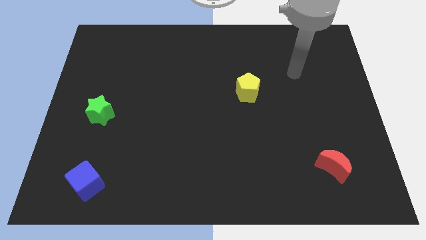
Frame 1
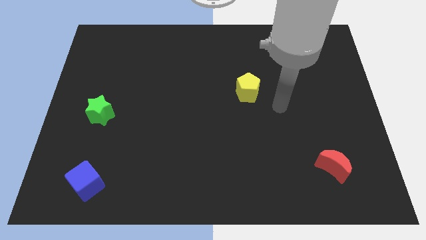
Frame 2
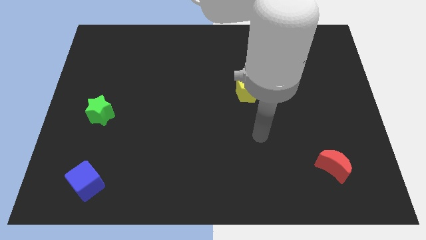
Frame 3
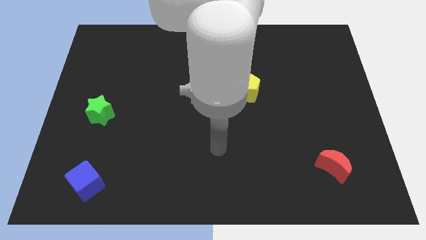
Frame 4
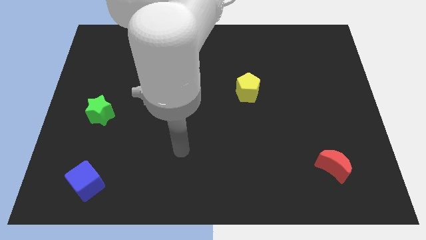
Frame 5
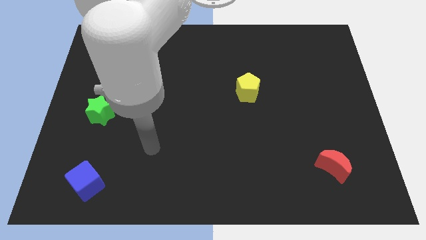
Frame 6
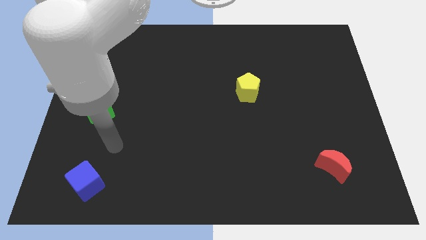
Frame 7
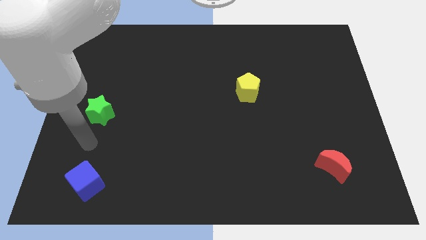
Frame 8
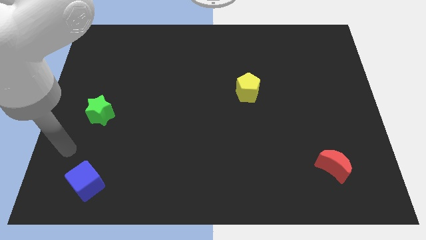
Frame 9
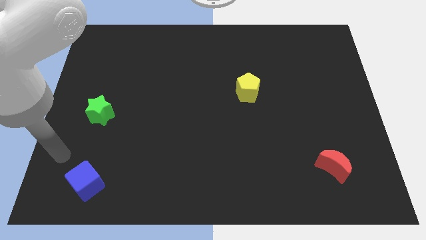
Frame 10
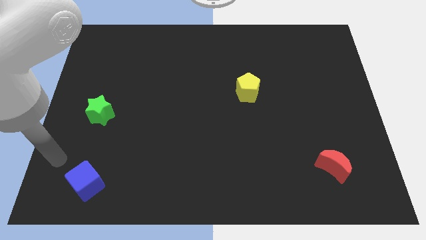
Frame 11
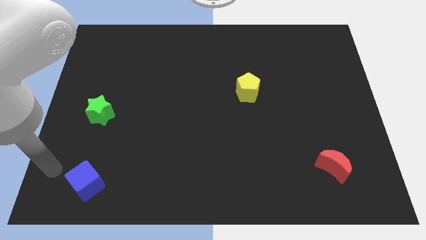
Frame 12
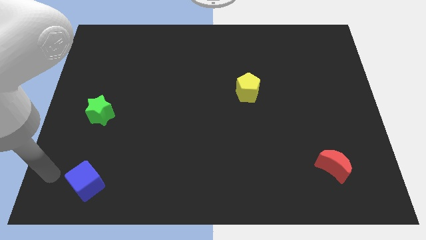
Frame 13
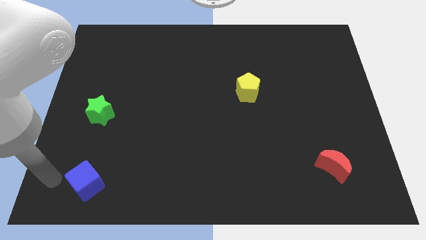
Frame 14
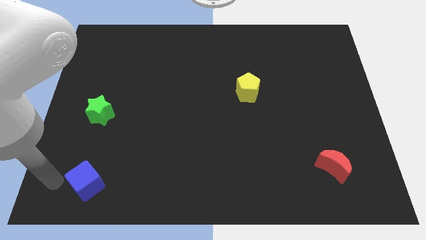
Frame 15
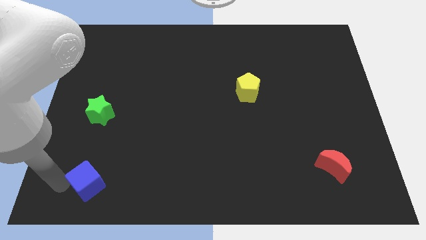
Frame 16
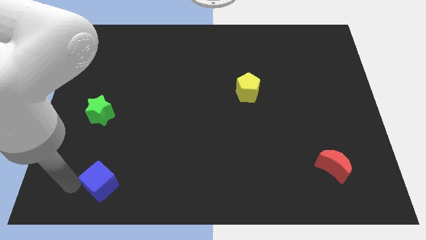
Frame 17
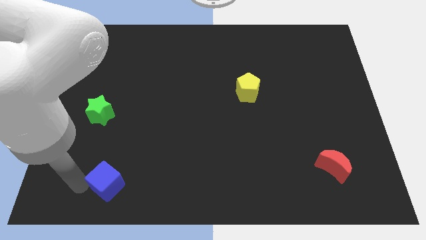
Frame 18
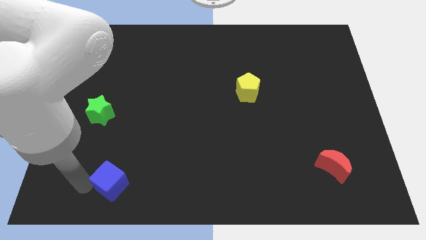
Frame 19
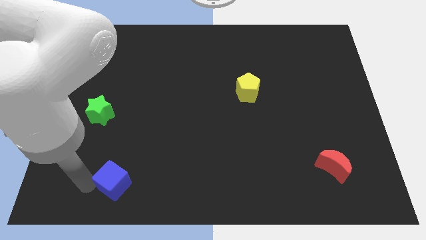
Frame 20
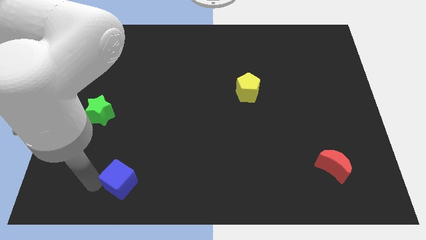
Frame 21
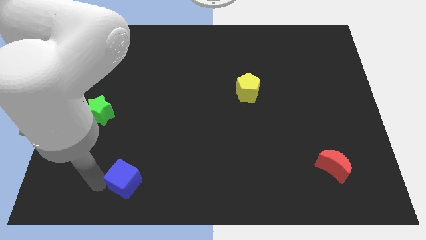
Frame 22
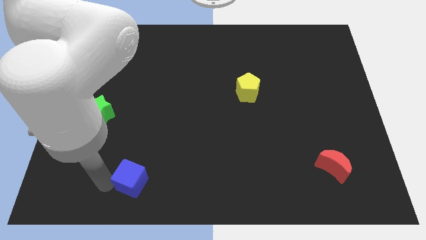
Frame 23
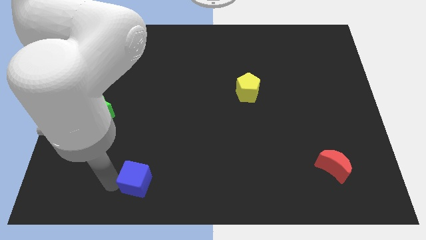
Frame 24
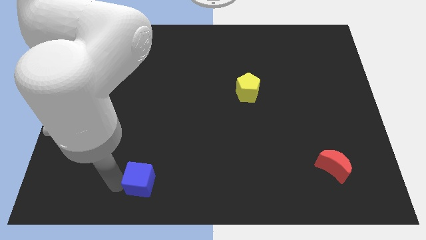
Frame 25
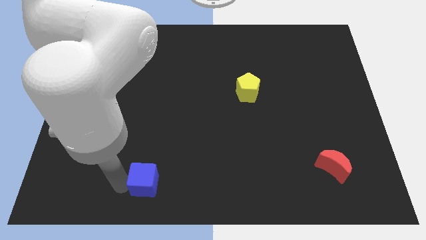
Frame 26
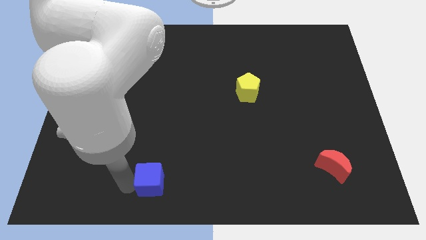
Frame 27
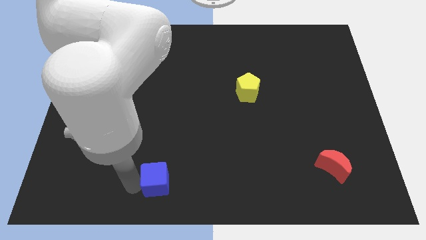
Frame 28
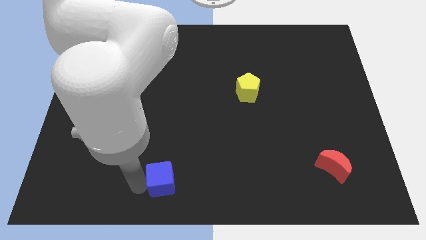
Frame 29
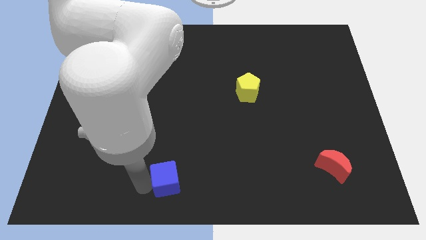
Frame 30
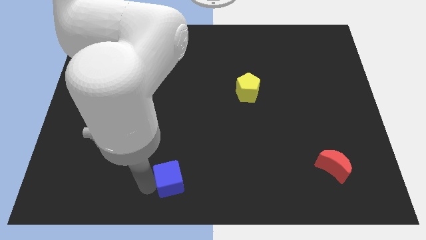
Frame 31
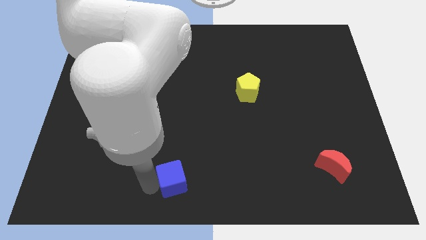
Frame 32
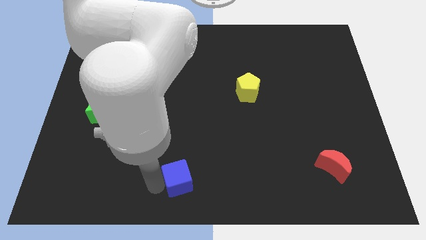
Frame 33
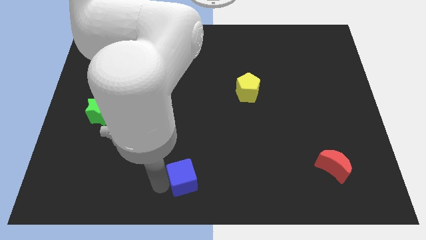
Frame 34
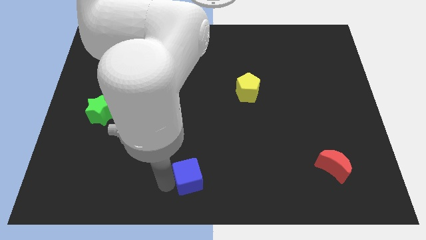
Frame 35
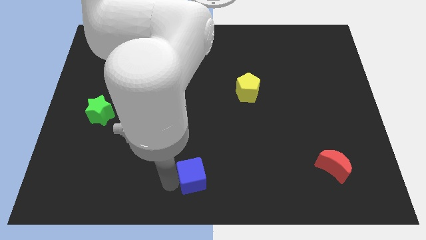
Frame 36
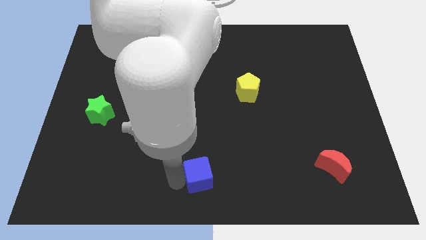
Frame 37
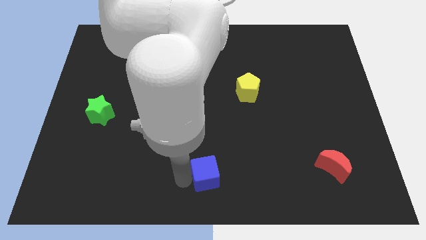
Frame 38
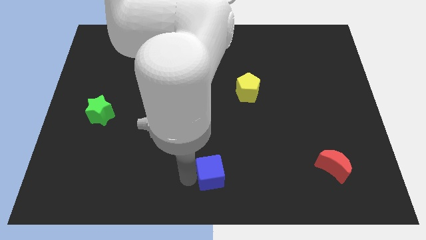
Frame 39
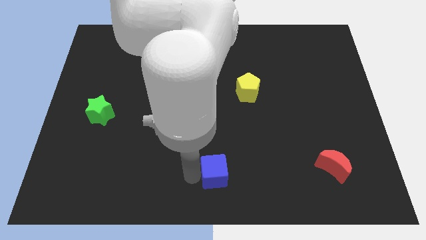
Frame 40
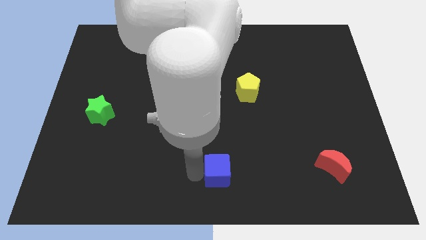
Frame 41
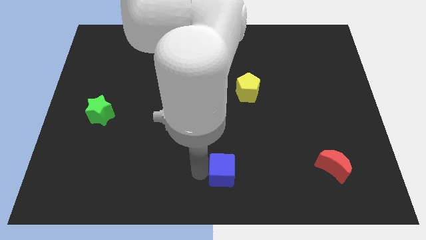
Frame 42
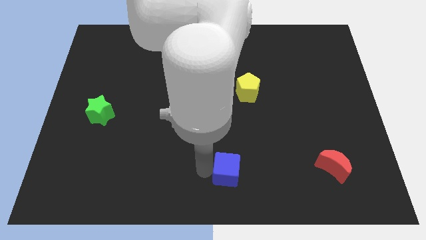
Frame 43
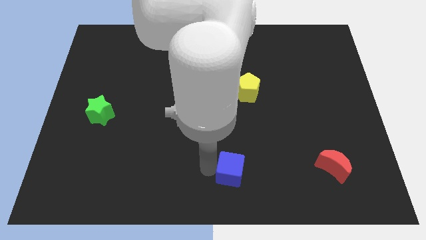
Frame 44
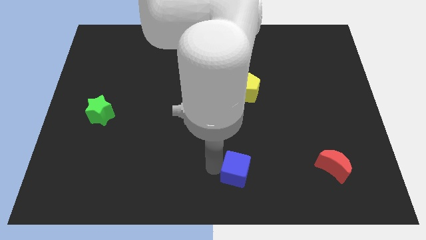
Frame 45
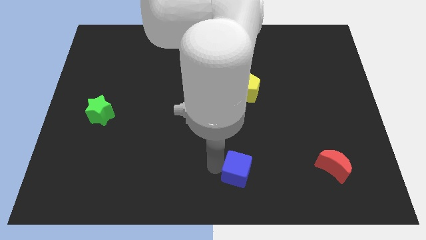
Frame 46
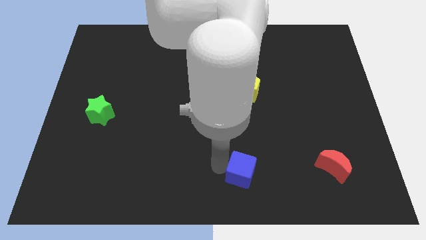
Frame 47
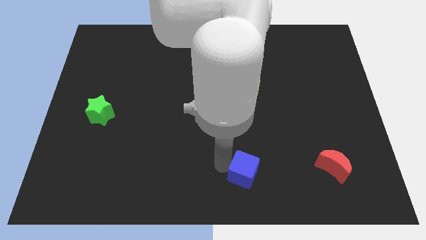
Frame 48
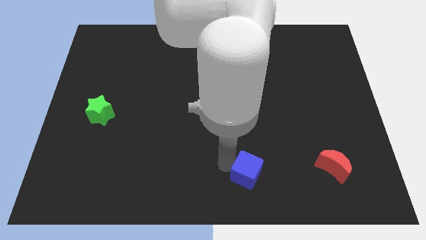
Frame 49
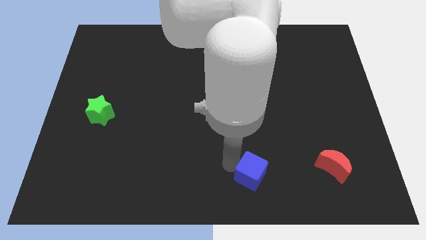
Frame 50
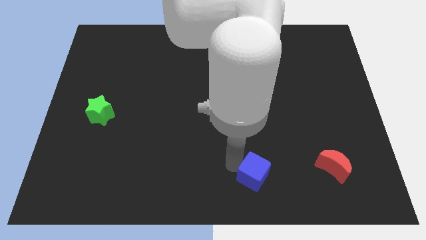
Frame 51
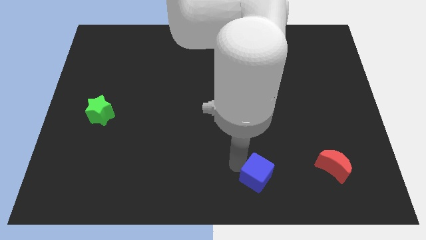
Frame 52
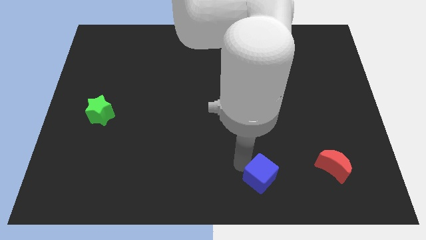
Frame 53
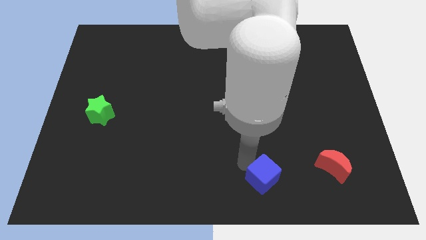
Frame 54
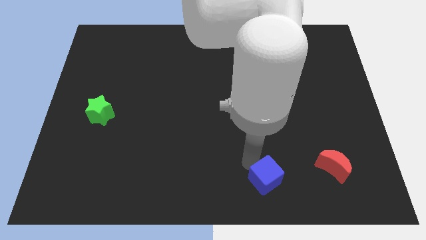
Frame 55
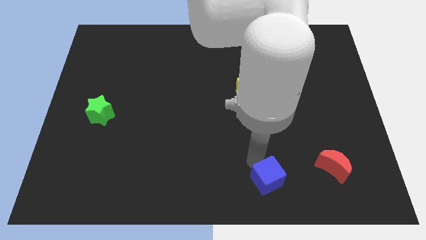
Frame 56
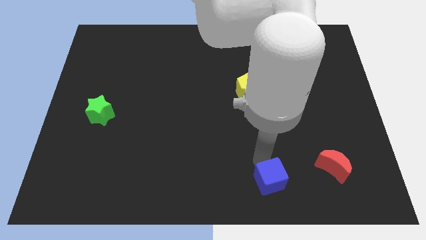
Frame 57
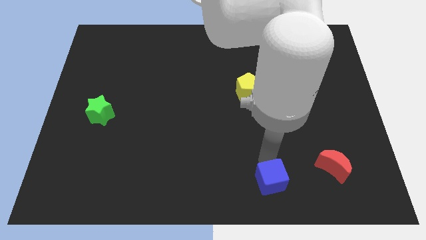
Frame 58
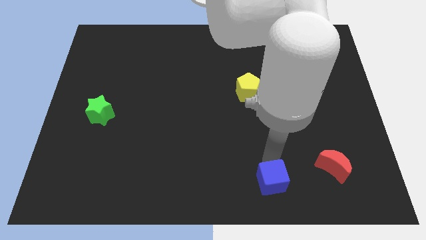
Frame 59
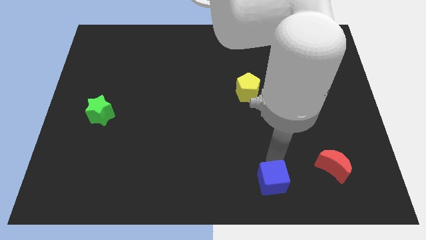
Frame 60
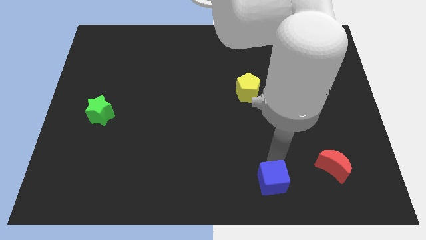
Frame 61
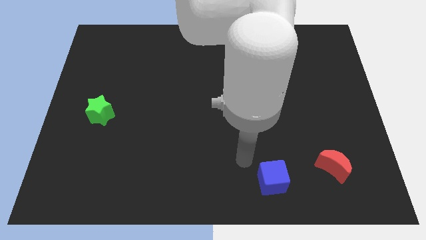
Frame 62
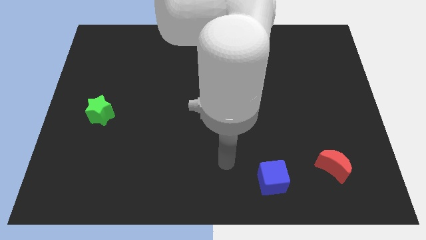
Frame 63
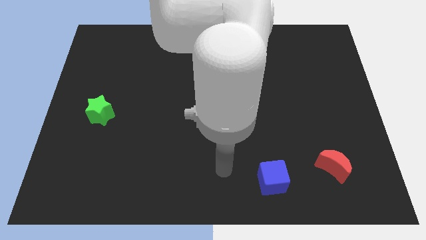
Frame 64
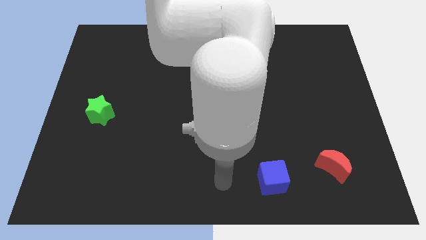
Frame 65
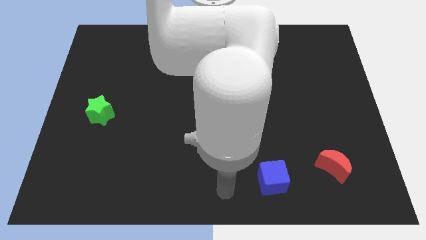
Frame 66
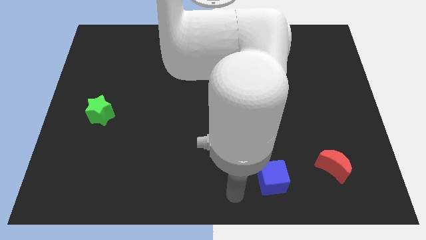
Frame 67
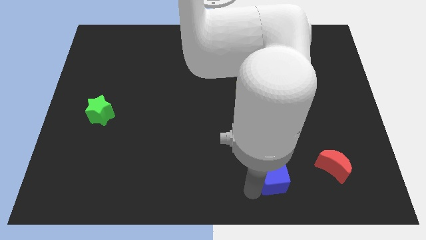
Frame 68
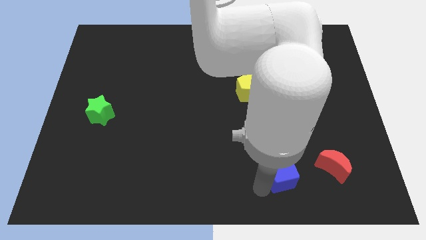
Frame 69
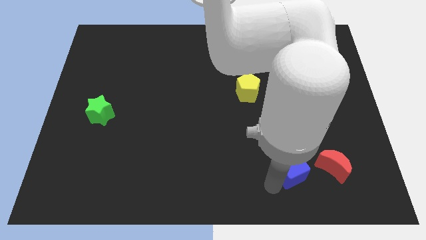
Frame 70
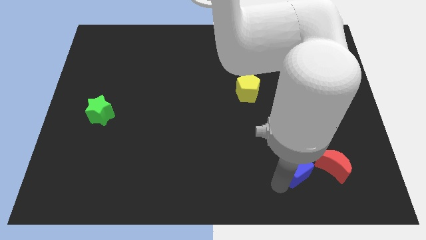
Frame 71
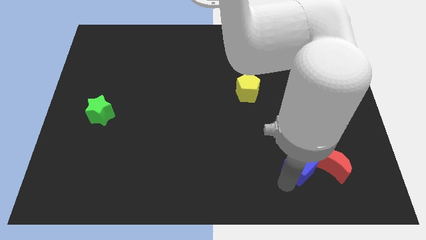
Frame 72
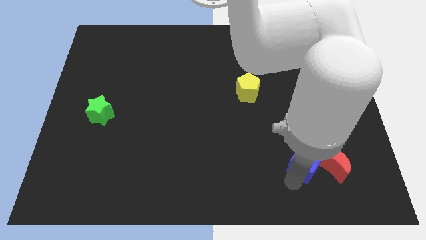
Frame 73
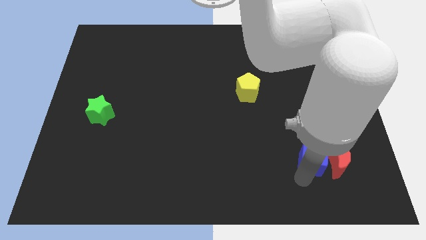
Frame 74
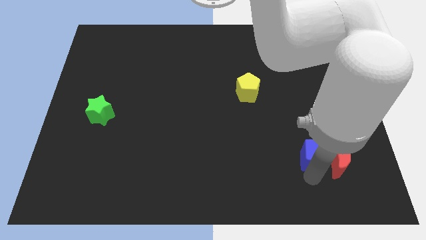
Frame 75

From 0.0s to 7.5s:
put the blue cube close to the red moon

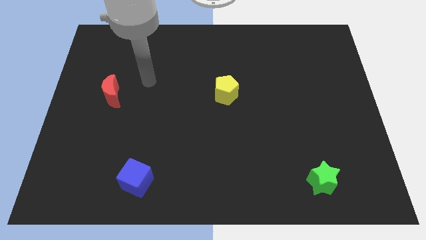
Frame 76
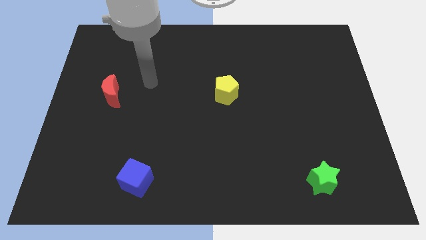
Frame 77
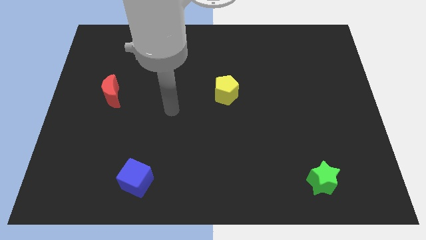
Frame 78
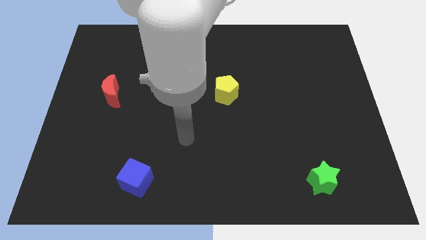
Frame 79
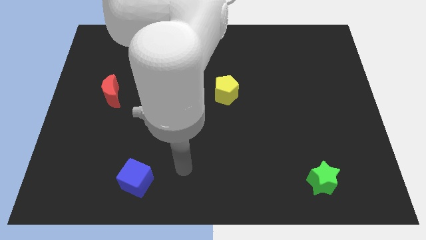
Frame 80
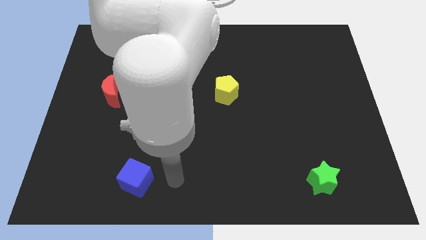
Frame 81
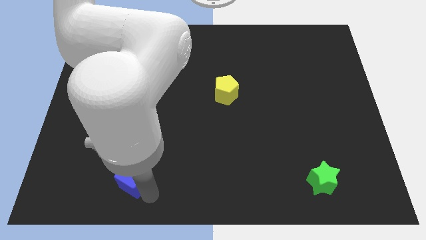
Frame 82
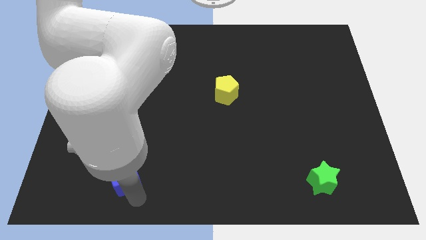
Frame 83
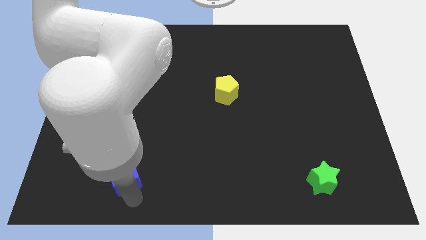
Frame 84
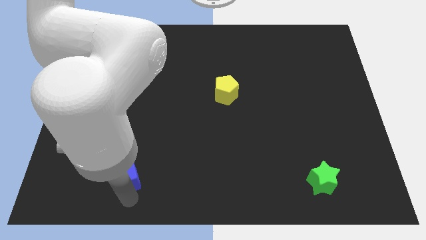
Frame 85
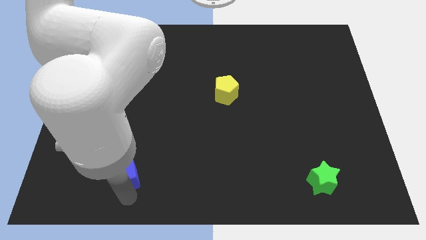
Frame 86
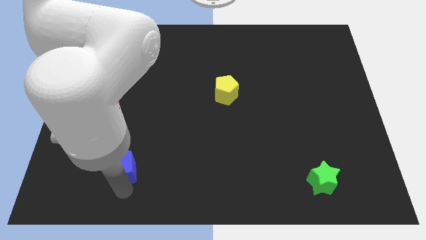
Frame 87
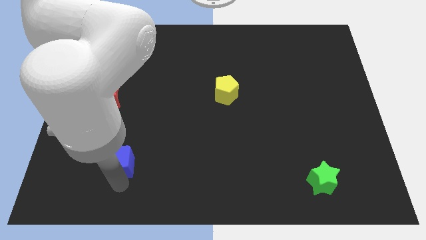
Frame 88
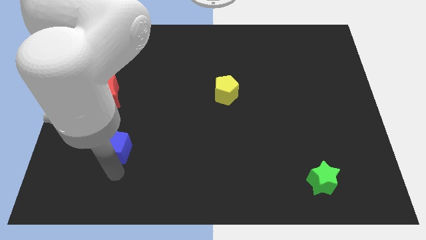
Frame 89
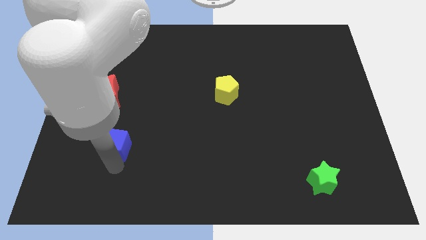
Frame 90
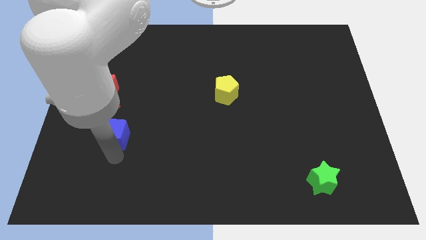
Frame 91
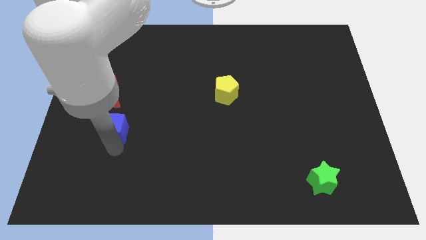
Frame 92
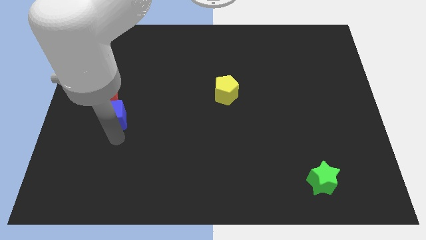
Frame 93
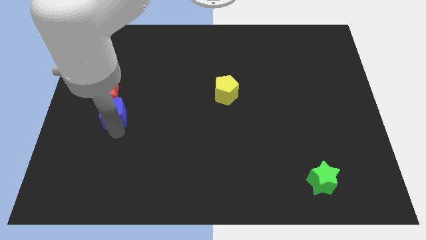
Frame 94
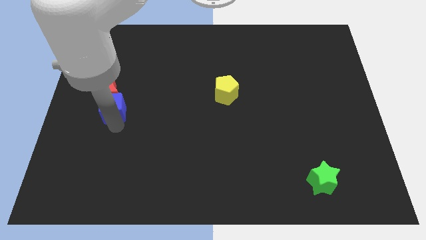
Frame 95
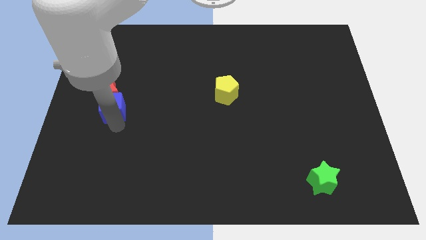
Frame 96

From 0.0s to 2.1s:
move the blue block to the red moon
